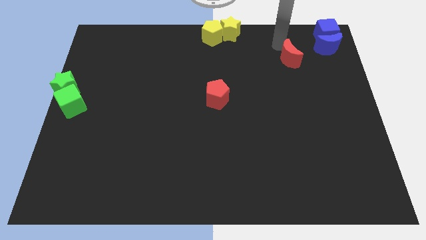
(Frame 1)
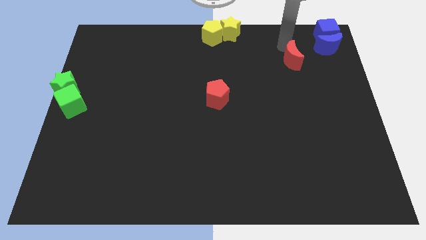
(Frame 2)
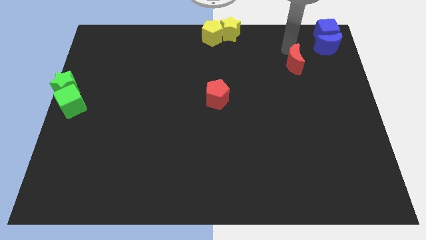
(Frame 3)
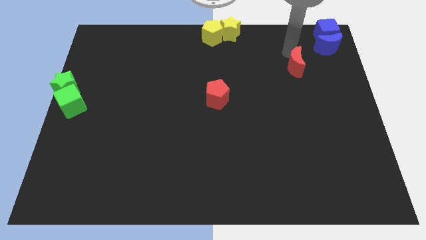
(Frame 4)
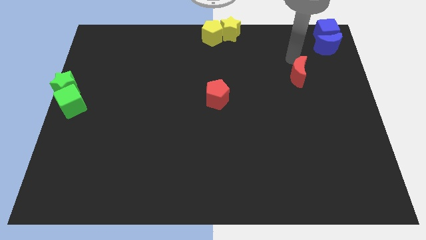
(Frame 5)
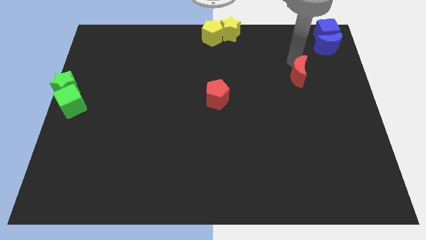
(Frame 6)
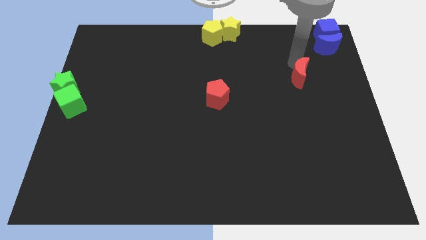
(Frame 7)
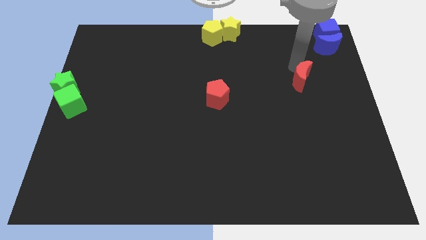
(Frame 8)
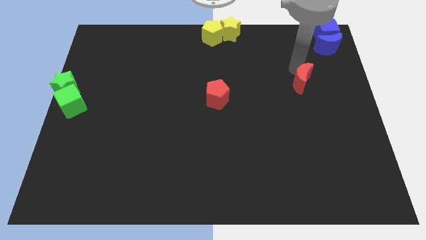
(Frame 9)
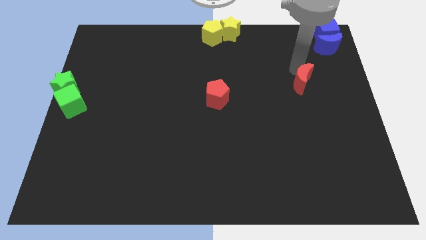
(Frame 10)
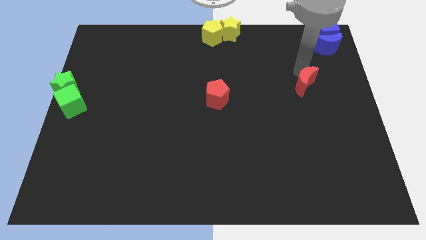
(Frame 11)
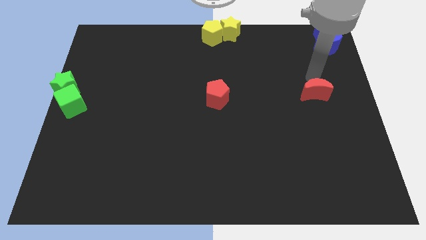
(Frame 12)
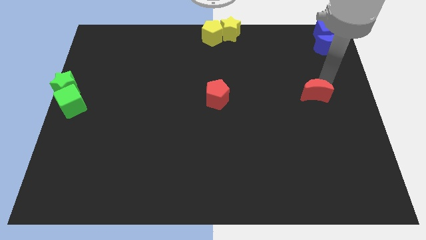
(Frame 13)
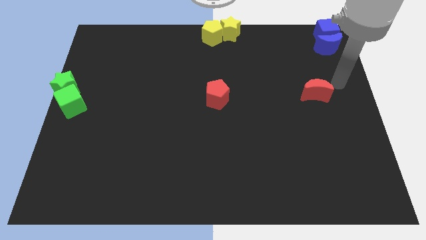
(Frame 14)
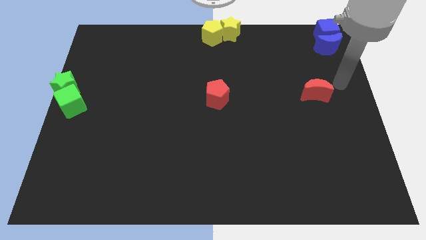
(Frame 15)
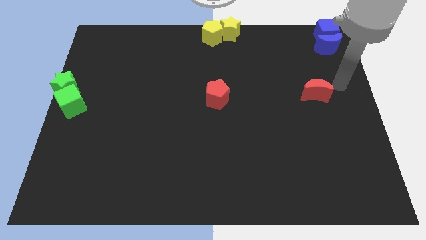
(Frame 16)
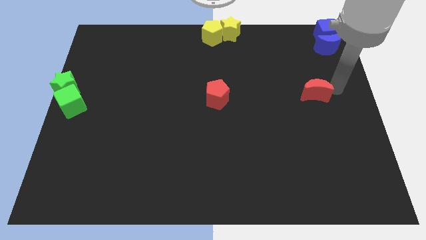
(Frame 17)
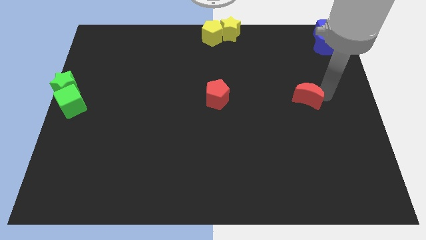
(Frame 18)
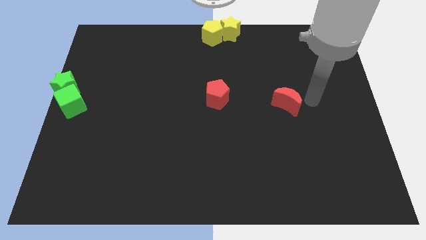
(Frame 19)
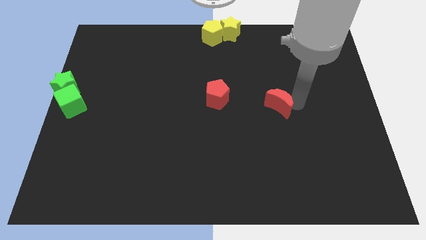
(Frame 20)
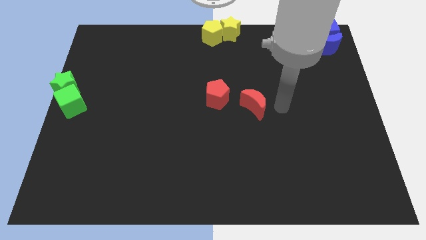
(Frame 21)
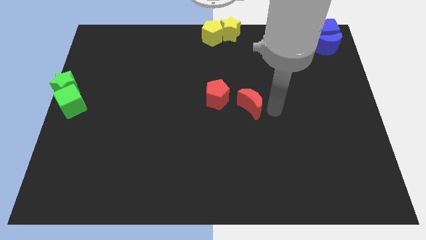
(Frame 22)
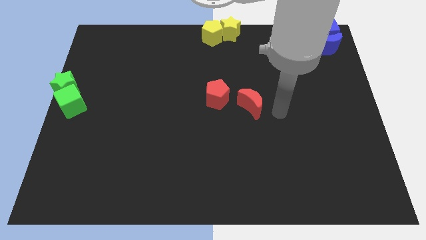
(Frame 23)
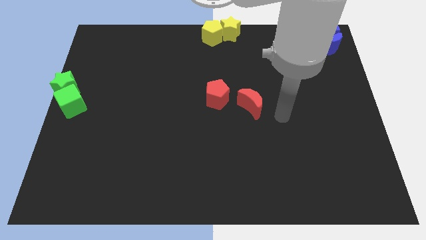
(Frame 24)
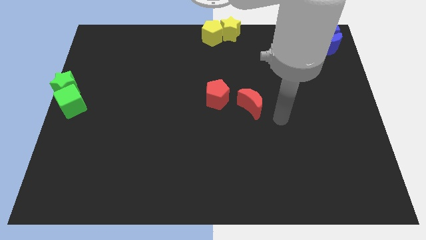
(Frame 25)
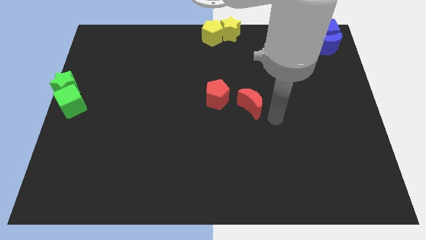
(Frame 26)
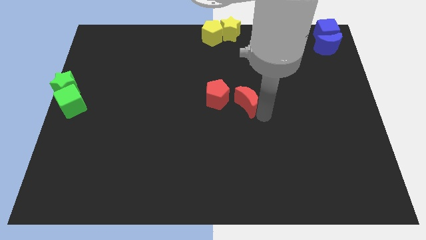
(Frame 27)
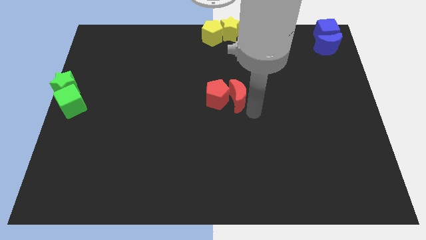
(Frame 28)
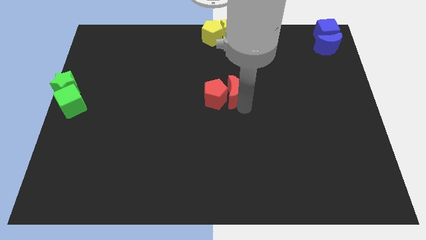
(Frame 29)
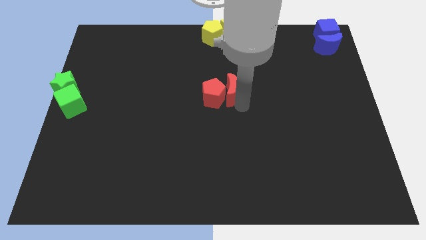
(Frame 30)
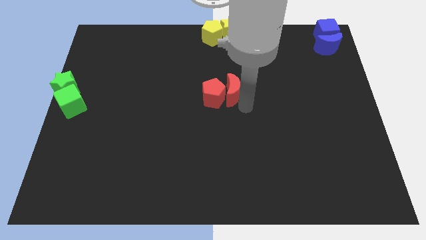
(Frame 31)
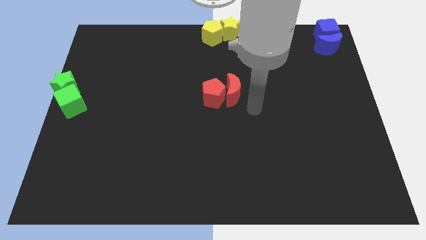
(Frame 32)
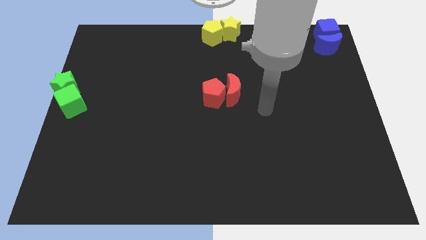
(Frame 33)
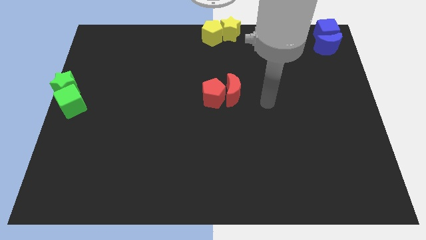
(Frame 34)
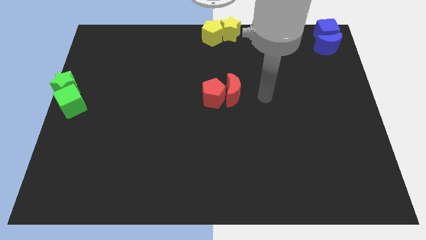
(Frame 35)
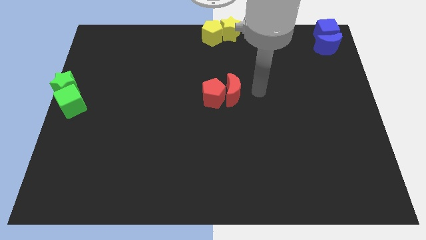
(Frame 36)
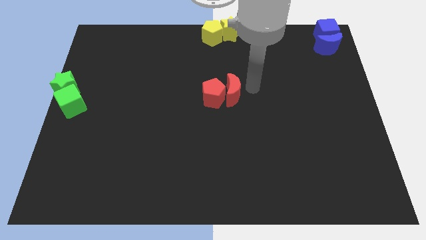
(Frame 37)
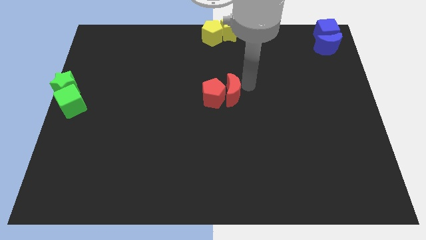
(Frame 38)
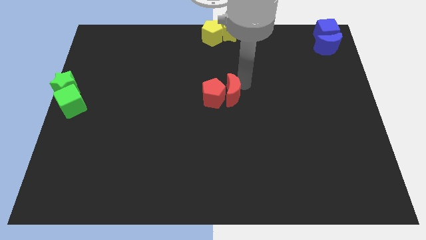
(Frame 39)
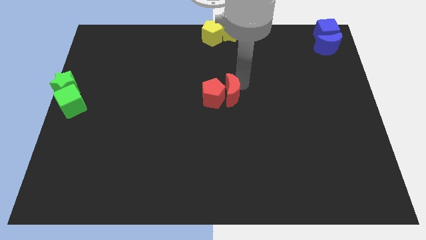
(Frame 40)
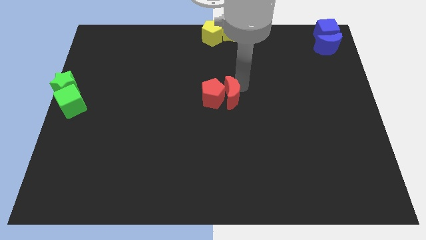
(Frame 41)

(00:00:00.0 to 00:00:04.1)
put the two red blocks at the center of the board

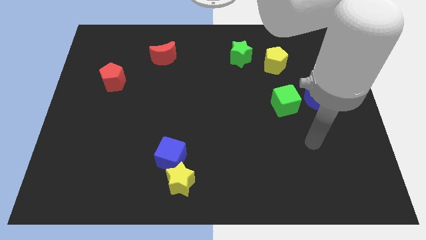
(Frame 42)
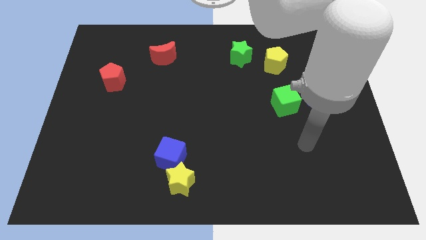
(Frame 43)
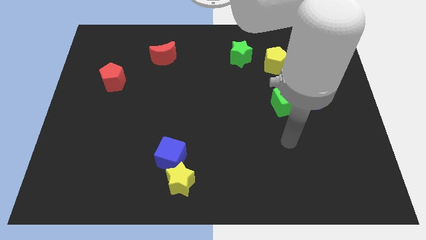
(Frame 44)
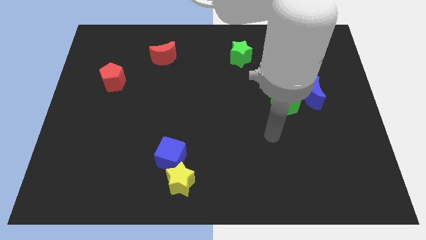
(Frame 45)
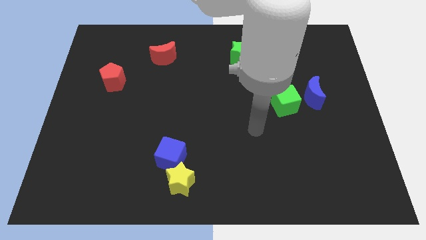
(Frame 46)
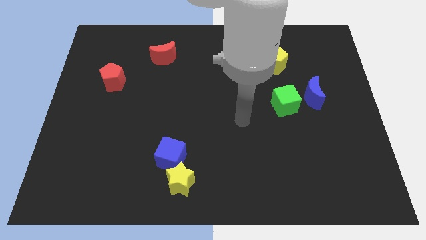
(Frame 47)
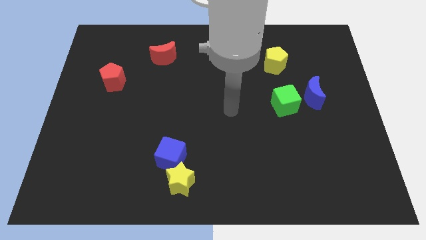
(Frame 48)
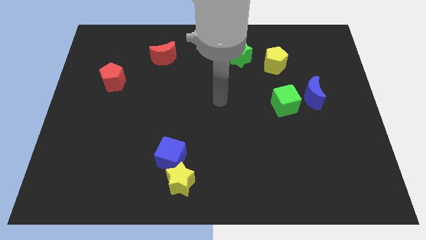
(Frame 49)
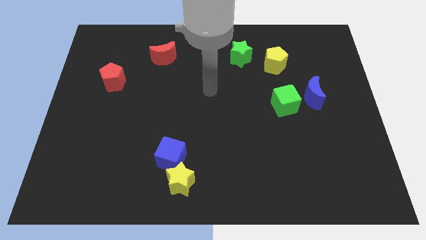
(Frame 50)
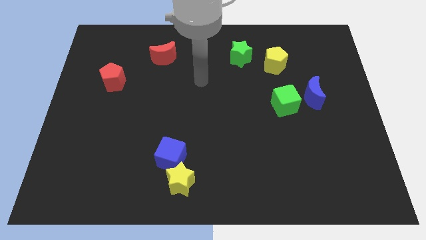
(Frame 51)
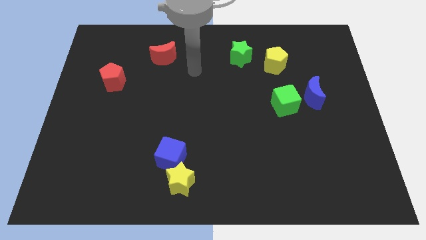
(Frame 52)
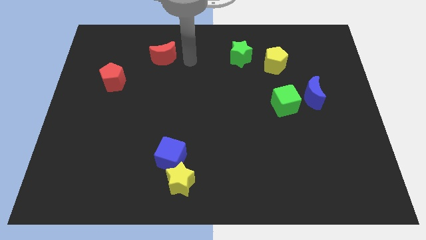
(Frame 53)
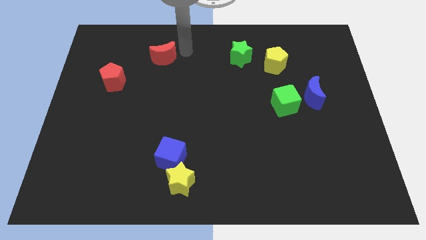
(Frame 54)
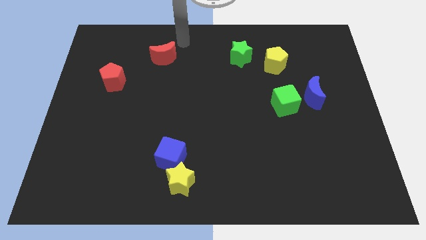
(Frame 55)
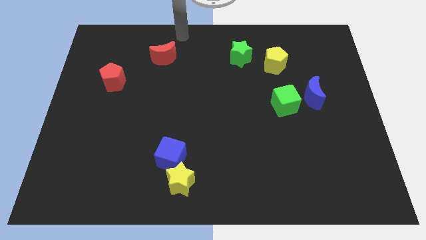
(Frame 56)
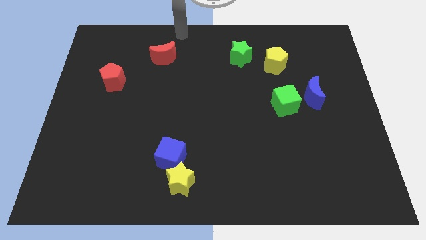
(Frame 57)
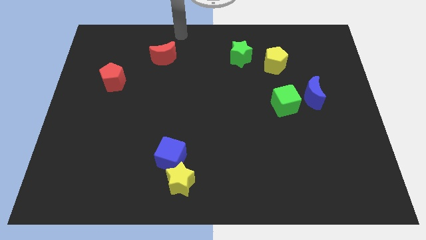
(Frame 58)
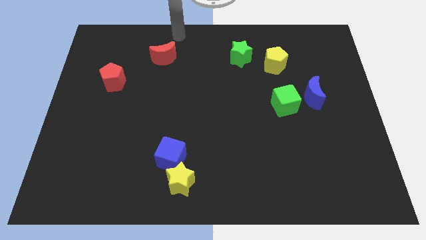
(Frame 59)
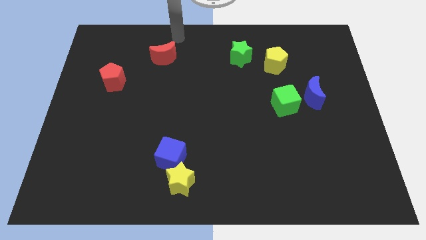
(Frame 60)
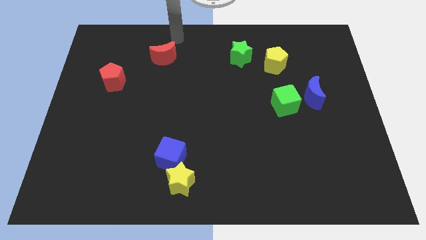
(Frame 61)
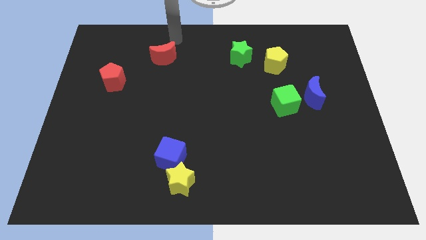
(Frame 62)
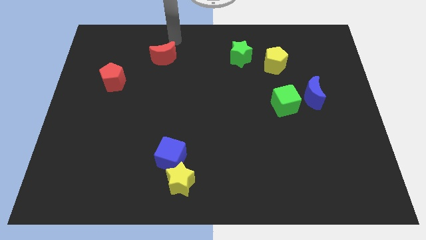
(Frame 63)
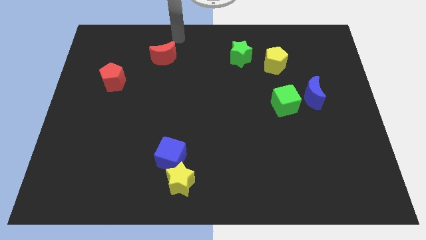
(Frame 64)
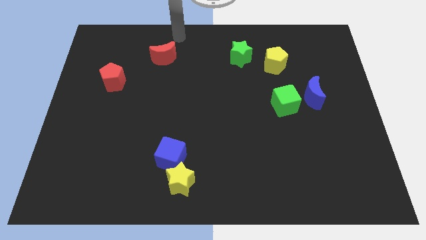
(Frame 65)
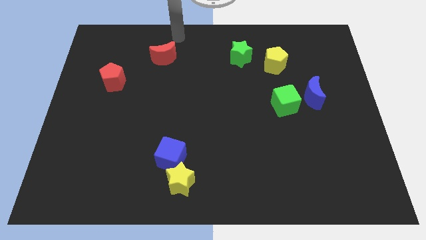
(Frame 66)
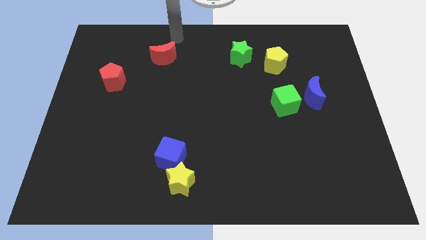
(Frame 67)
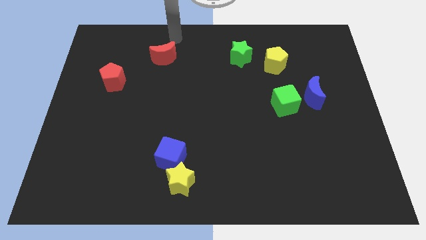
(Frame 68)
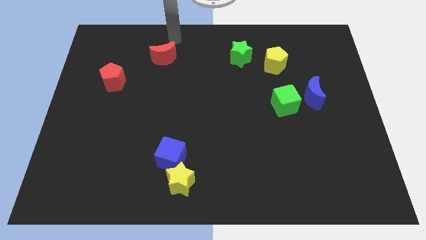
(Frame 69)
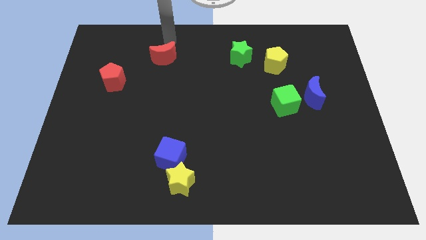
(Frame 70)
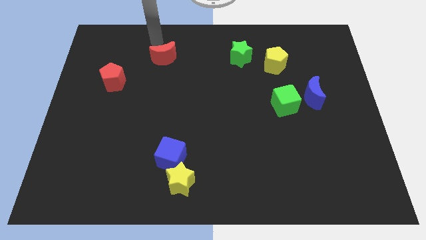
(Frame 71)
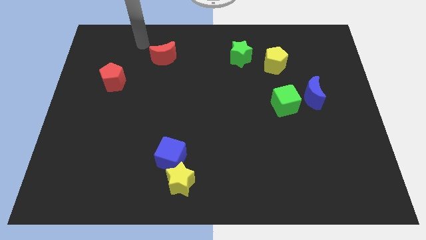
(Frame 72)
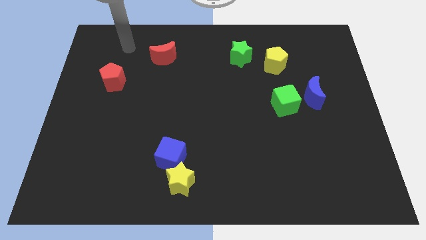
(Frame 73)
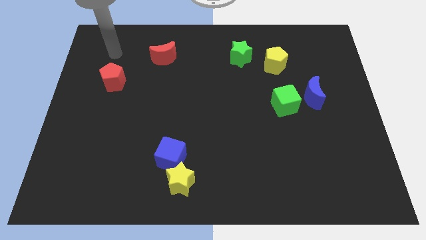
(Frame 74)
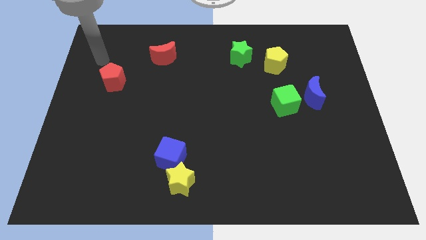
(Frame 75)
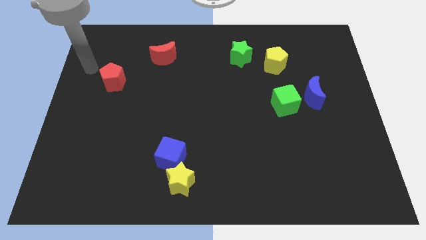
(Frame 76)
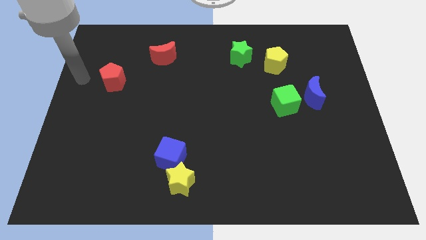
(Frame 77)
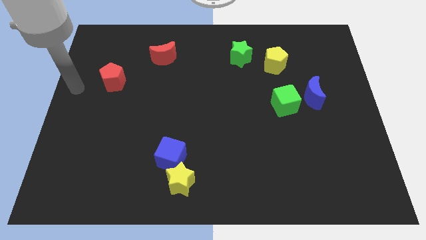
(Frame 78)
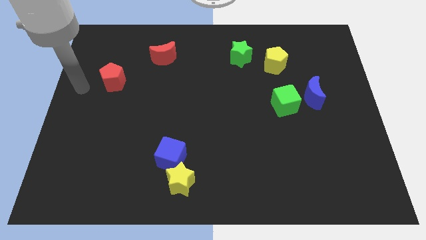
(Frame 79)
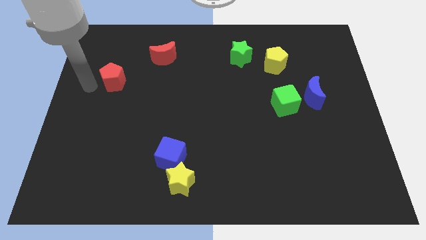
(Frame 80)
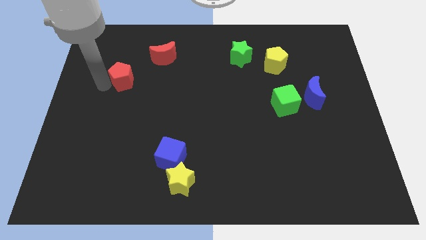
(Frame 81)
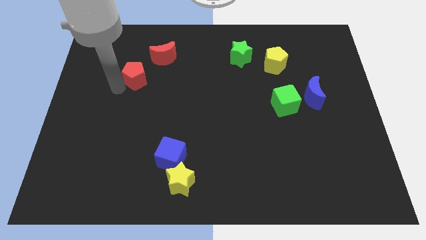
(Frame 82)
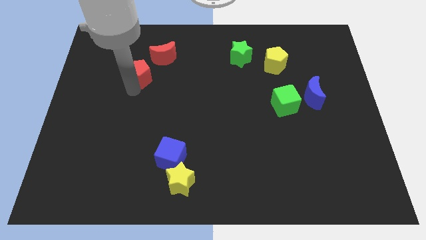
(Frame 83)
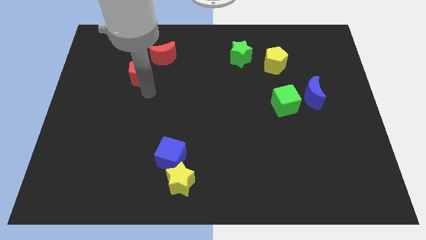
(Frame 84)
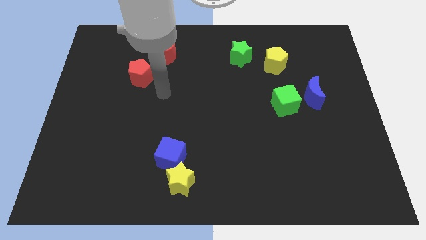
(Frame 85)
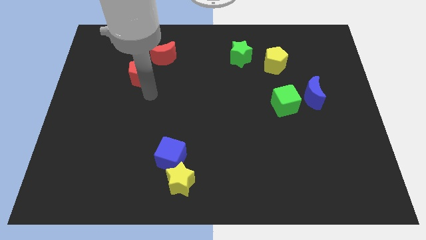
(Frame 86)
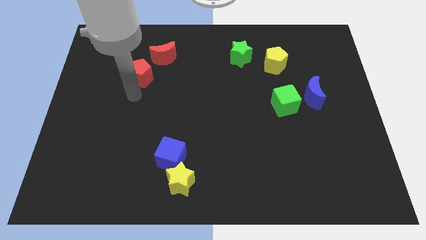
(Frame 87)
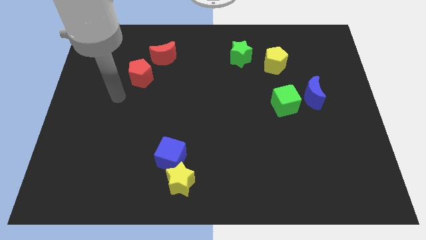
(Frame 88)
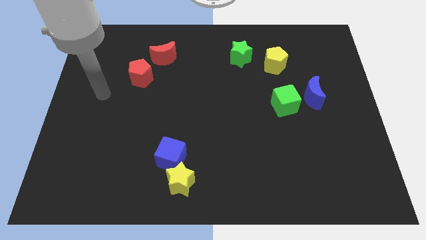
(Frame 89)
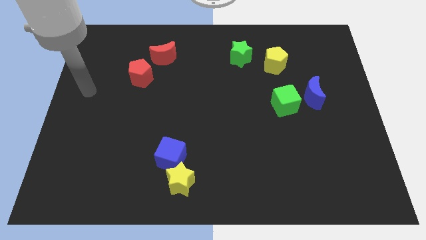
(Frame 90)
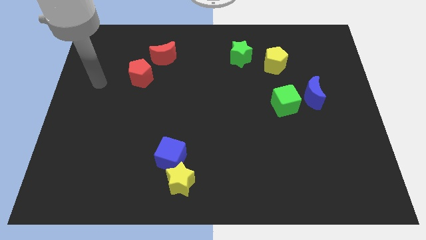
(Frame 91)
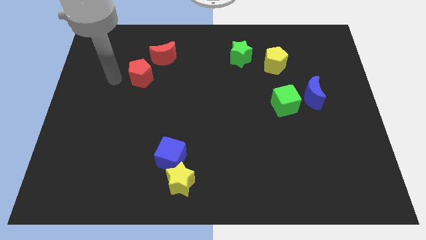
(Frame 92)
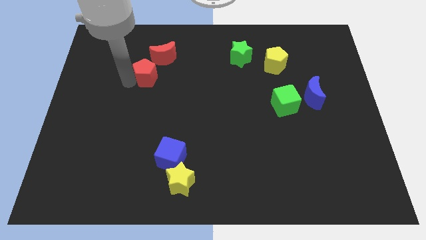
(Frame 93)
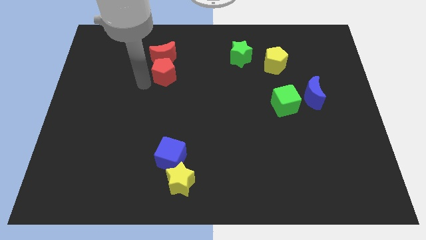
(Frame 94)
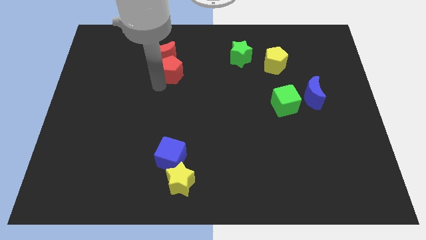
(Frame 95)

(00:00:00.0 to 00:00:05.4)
place the red pentagon vertically above the blue cube
